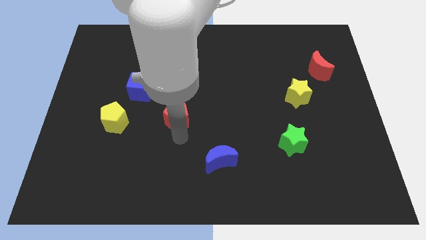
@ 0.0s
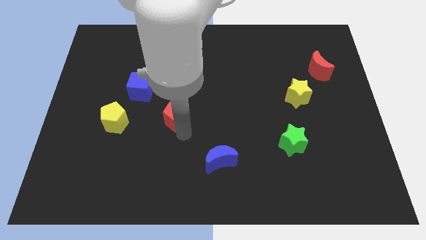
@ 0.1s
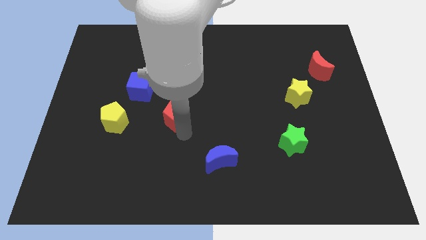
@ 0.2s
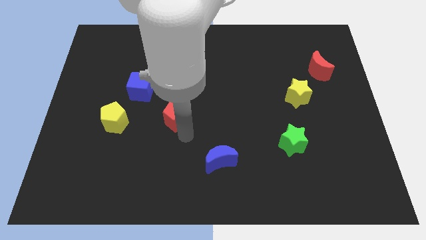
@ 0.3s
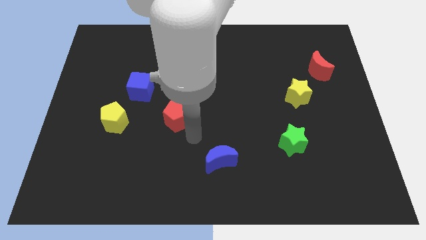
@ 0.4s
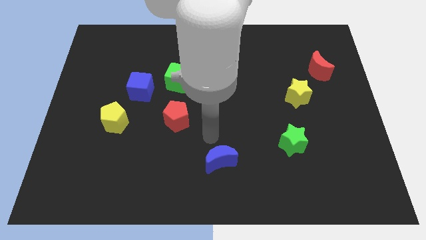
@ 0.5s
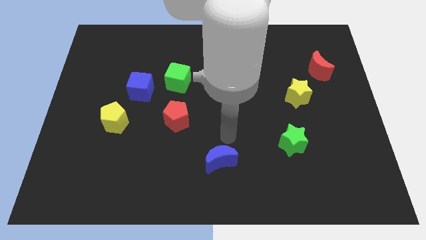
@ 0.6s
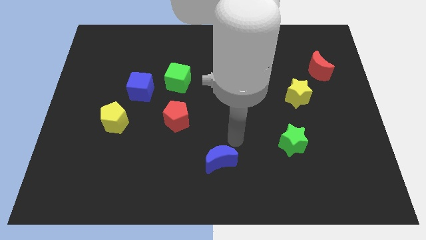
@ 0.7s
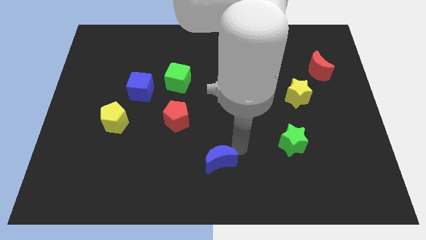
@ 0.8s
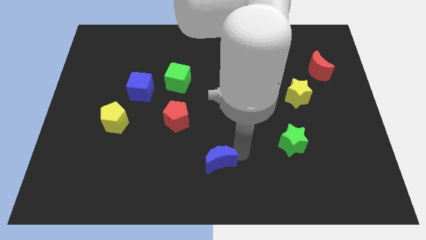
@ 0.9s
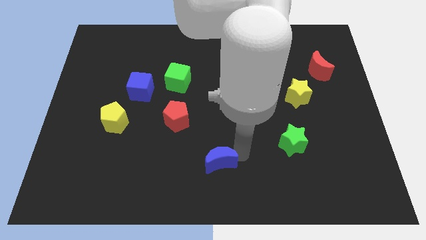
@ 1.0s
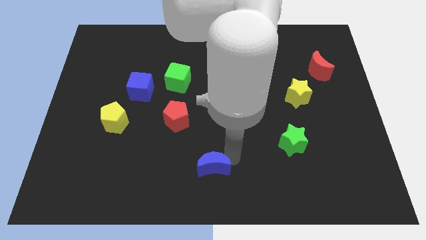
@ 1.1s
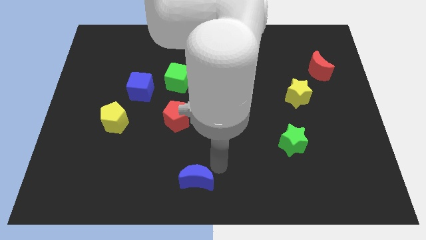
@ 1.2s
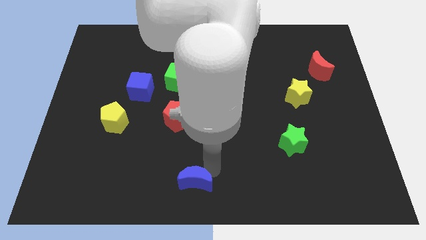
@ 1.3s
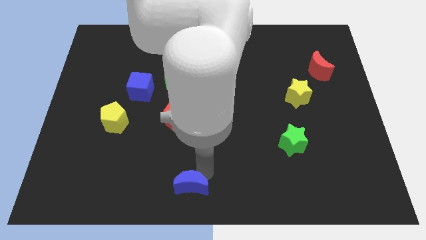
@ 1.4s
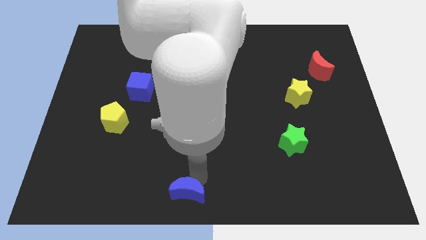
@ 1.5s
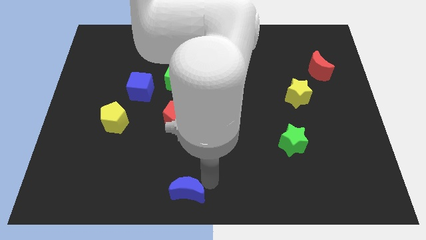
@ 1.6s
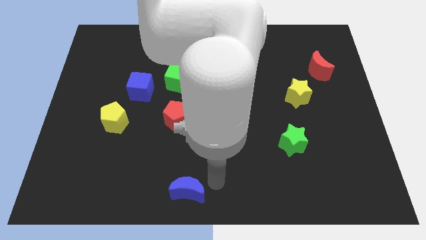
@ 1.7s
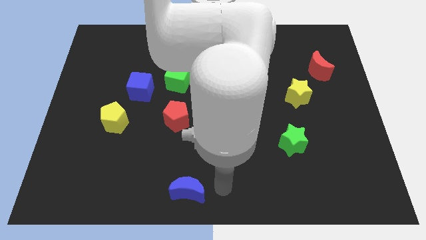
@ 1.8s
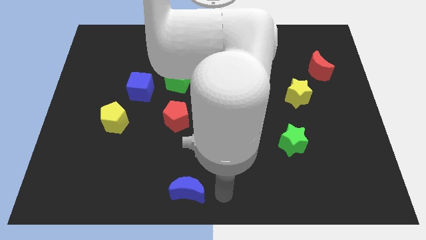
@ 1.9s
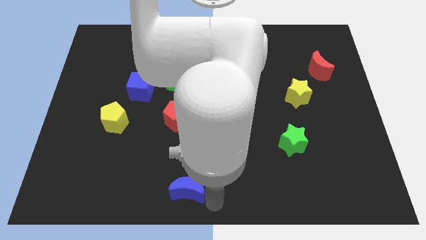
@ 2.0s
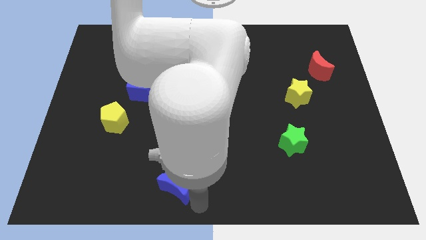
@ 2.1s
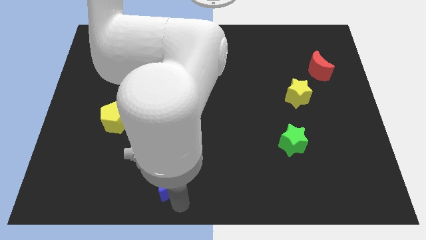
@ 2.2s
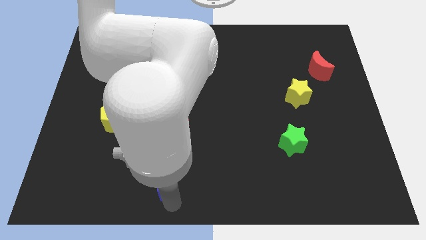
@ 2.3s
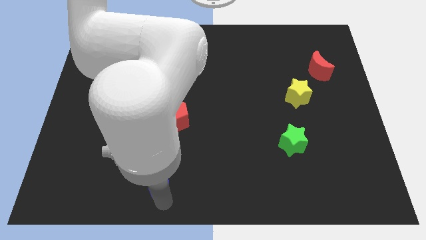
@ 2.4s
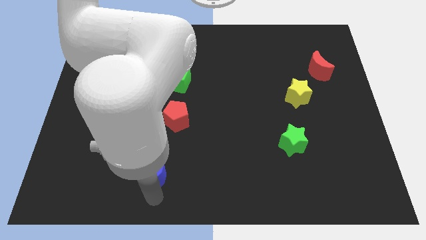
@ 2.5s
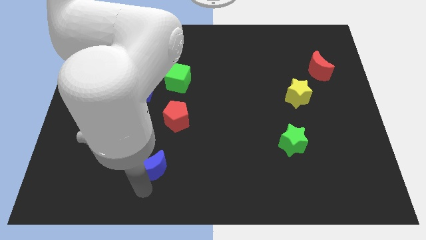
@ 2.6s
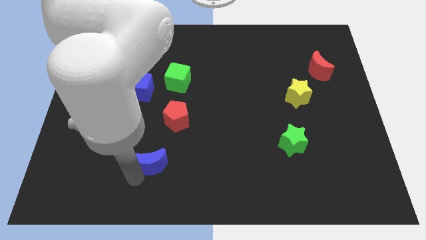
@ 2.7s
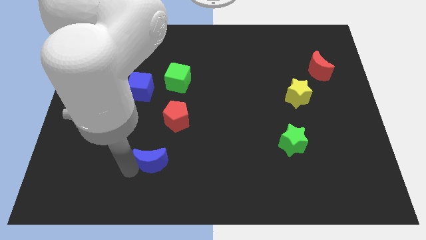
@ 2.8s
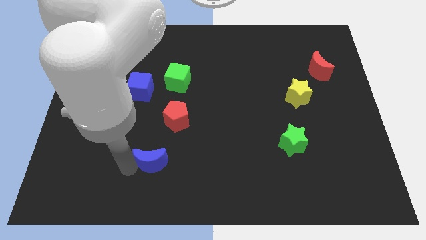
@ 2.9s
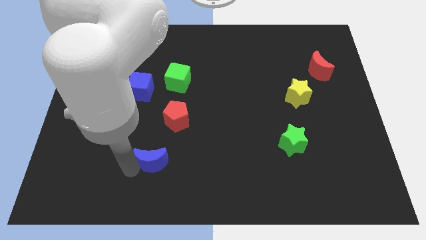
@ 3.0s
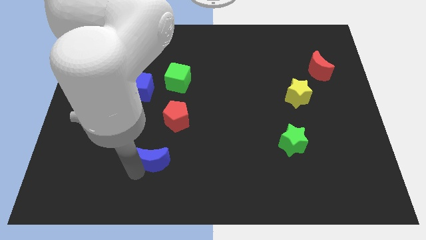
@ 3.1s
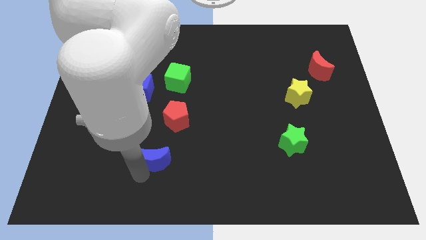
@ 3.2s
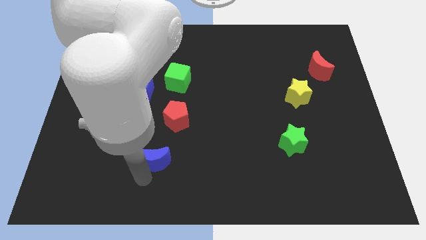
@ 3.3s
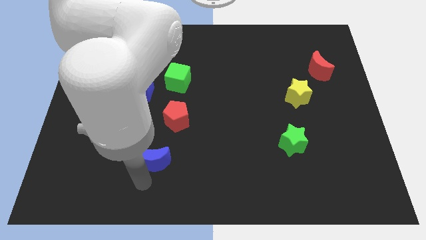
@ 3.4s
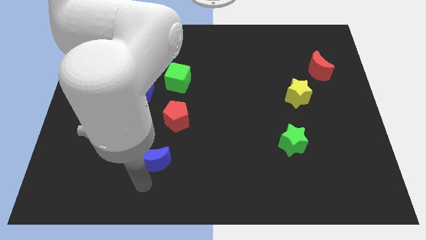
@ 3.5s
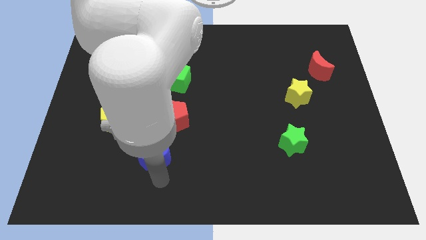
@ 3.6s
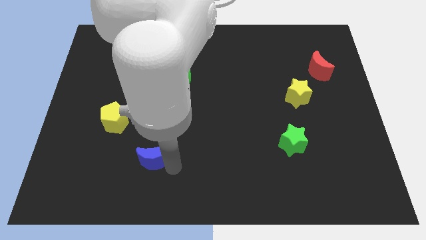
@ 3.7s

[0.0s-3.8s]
move the blue crescent towards bottom left

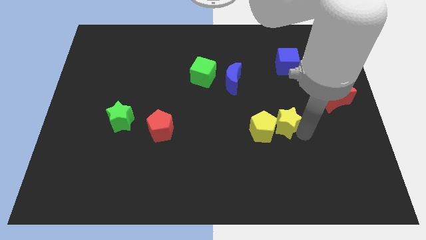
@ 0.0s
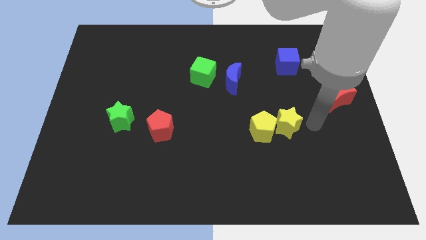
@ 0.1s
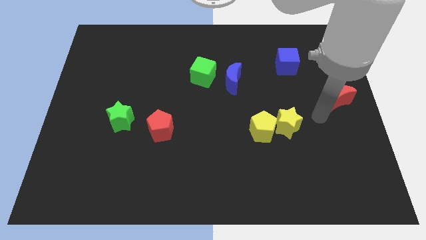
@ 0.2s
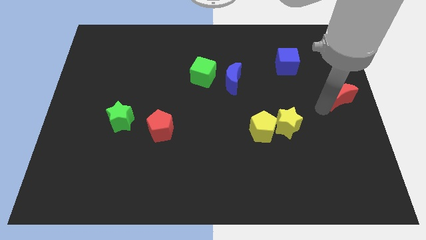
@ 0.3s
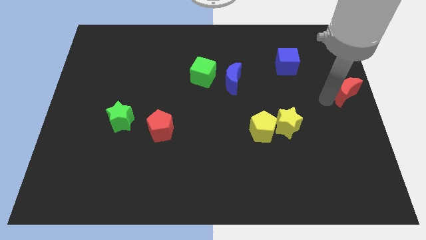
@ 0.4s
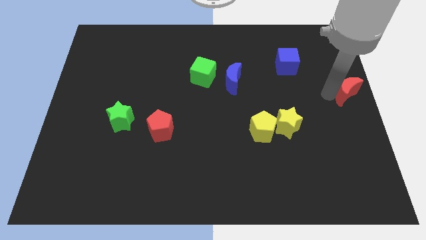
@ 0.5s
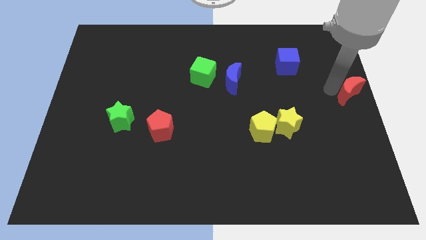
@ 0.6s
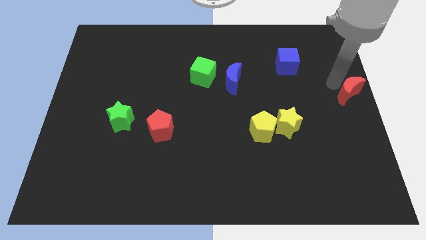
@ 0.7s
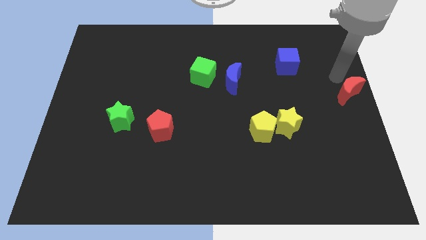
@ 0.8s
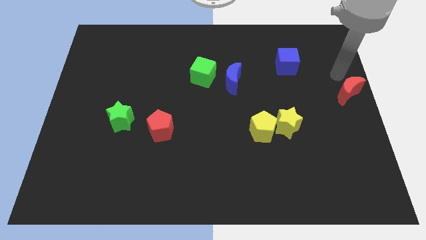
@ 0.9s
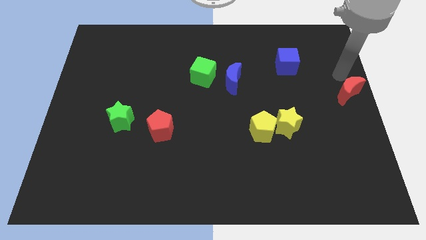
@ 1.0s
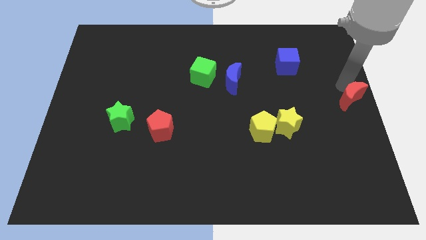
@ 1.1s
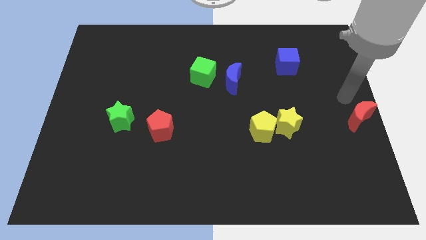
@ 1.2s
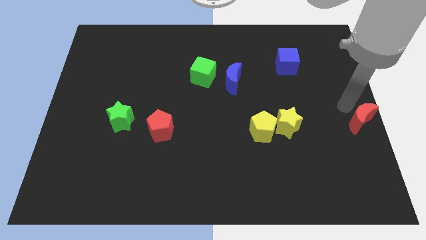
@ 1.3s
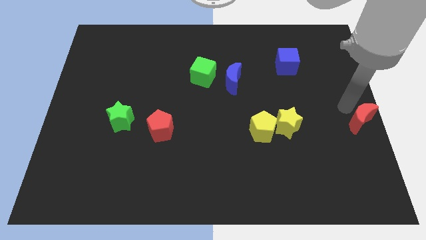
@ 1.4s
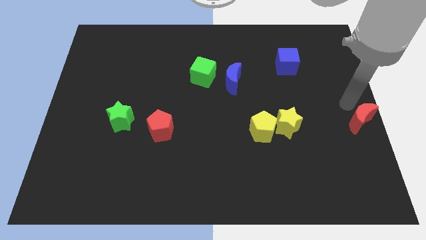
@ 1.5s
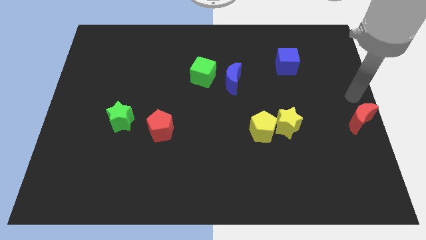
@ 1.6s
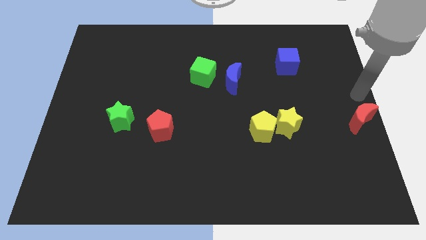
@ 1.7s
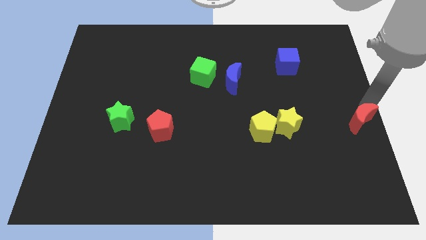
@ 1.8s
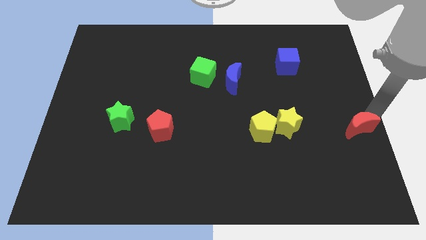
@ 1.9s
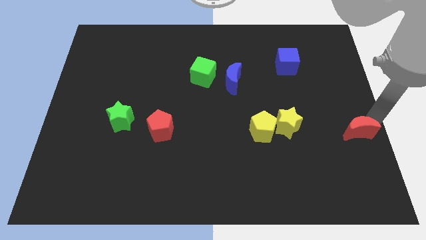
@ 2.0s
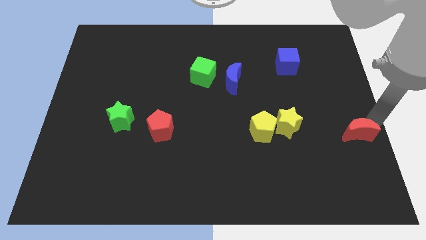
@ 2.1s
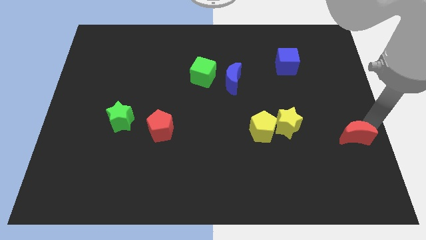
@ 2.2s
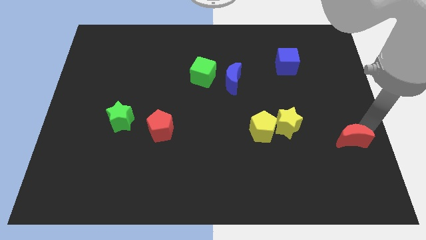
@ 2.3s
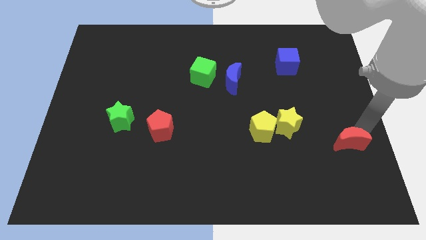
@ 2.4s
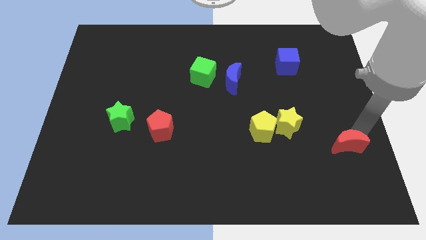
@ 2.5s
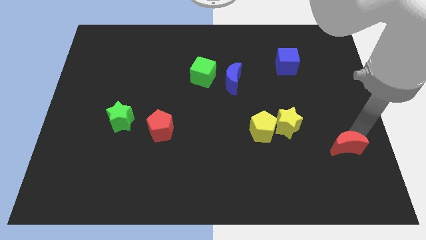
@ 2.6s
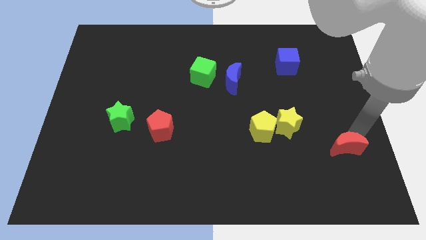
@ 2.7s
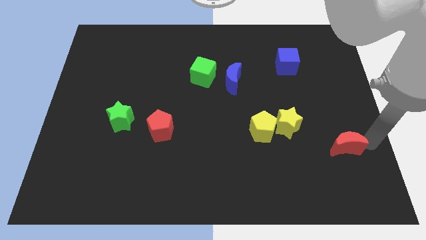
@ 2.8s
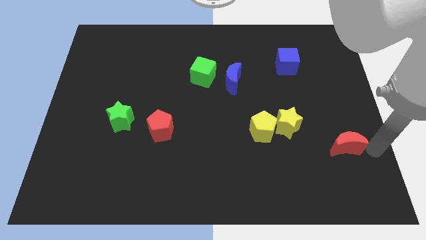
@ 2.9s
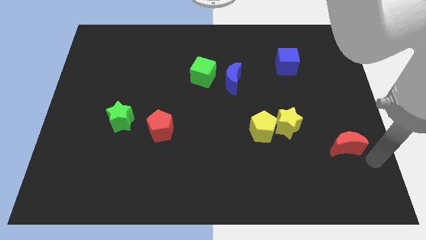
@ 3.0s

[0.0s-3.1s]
push the red moon downward

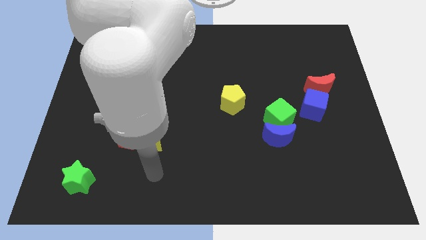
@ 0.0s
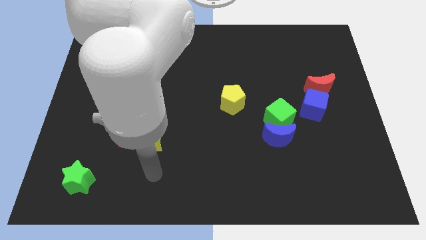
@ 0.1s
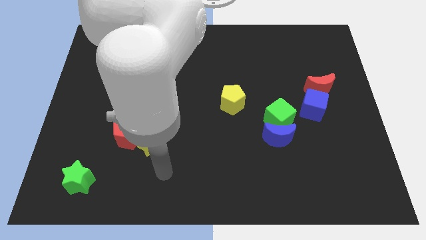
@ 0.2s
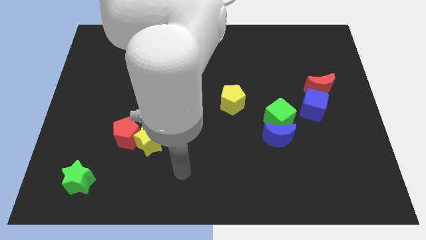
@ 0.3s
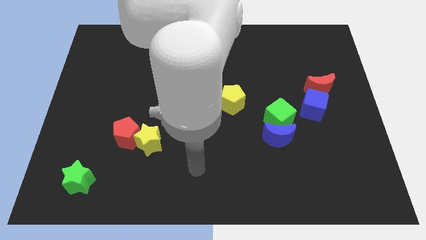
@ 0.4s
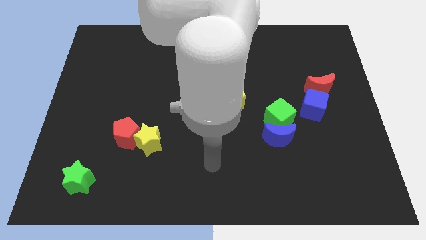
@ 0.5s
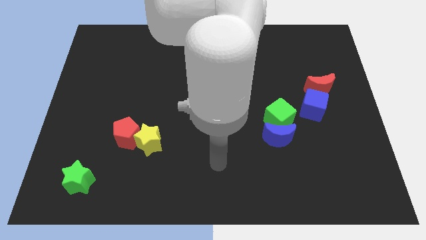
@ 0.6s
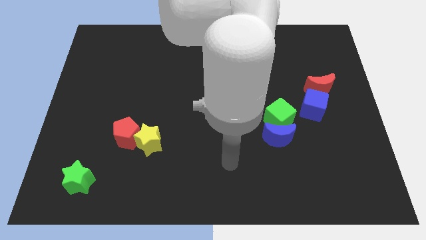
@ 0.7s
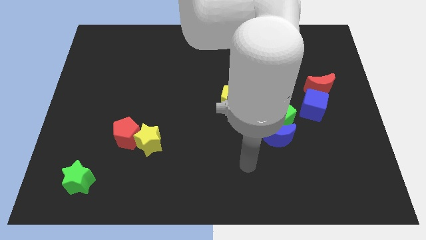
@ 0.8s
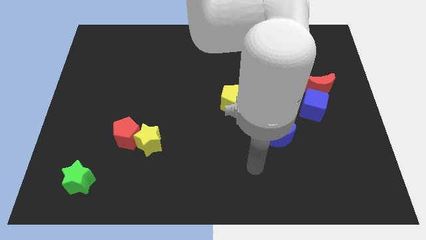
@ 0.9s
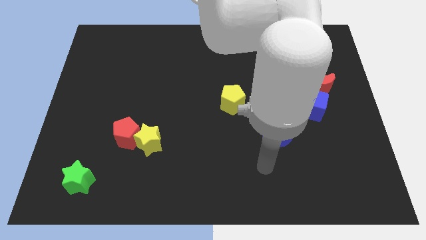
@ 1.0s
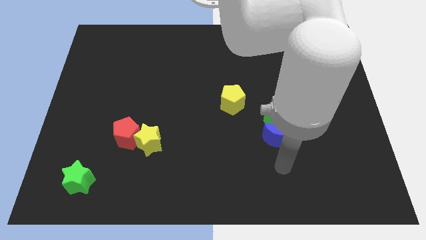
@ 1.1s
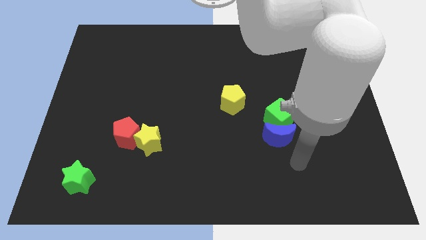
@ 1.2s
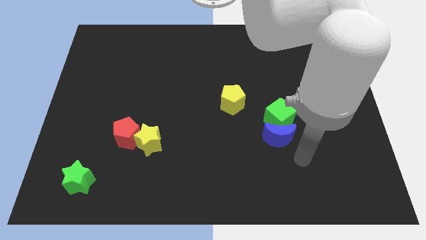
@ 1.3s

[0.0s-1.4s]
drag your arm to the blue moon

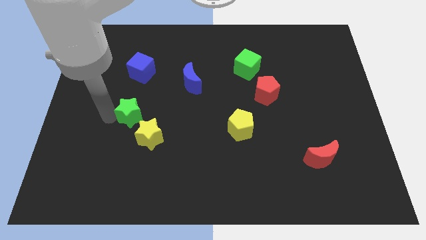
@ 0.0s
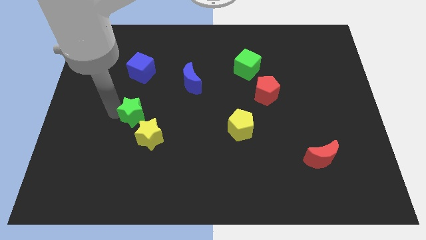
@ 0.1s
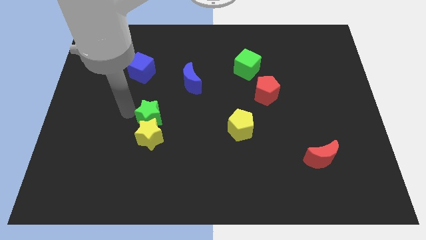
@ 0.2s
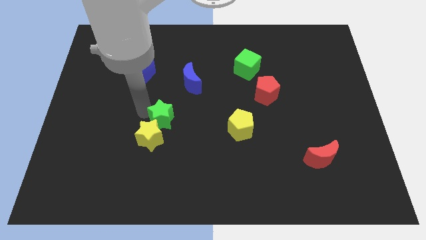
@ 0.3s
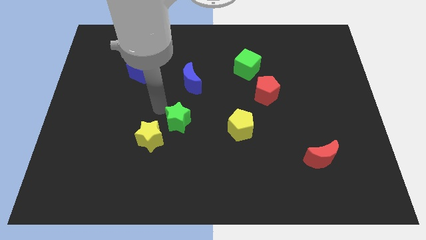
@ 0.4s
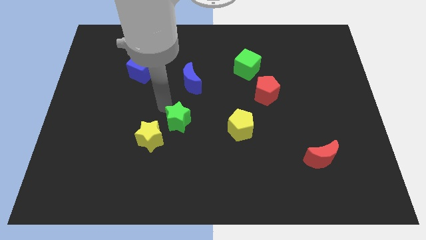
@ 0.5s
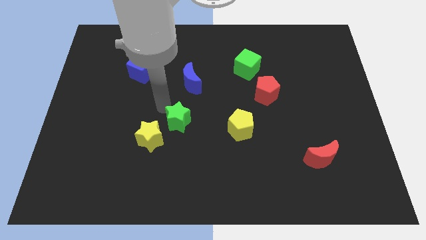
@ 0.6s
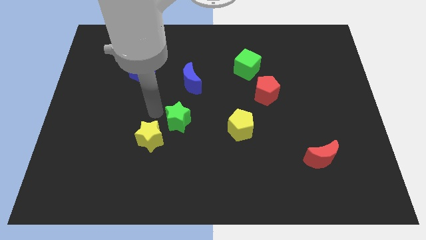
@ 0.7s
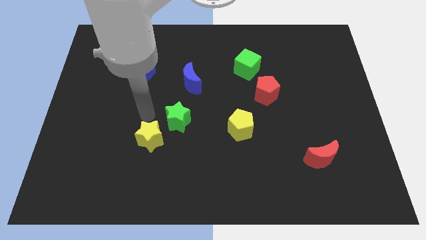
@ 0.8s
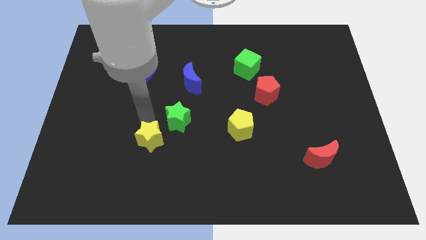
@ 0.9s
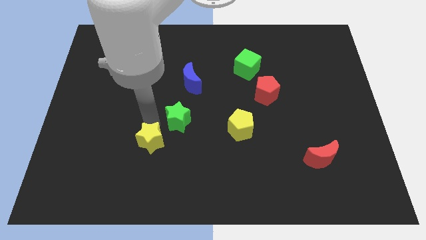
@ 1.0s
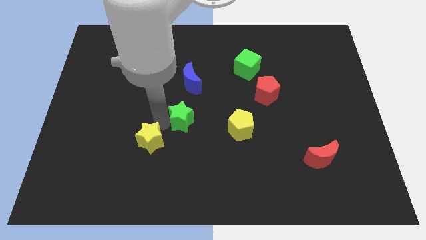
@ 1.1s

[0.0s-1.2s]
move green star right above yellow star
